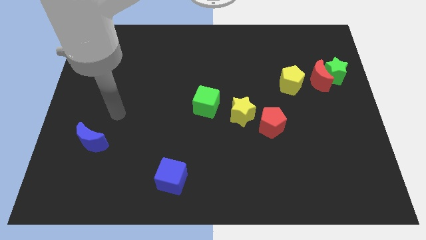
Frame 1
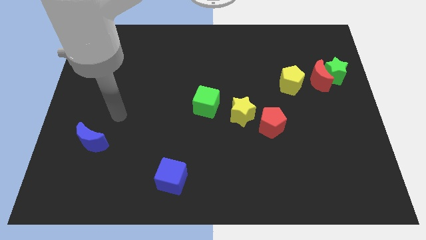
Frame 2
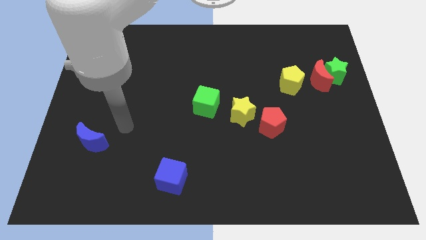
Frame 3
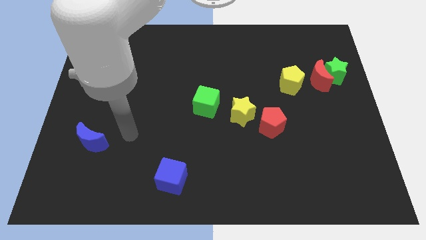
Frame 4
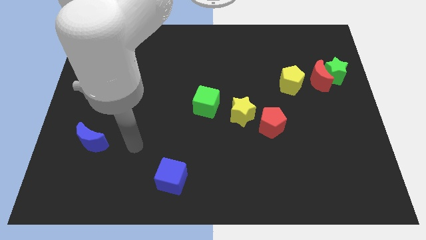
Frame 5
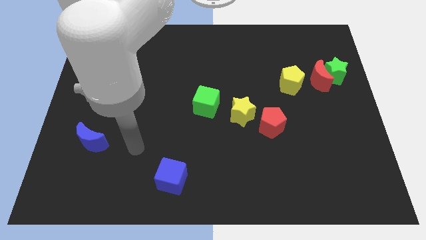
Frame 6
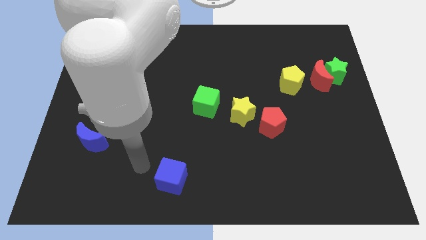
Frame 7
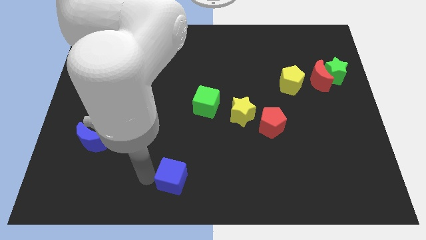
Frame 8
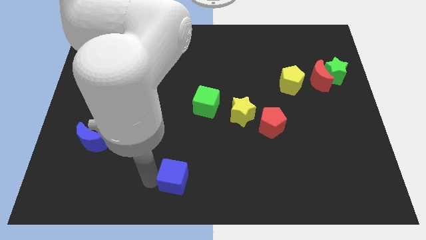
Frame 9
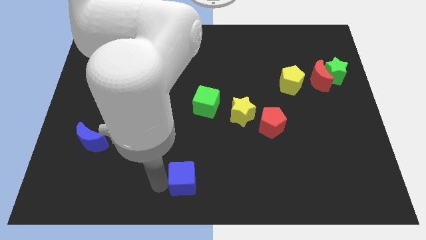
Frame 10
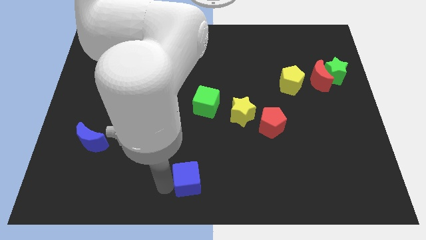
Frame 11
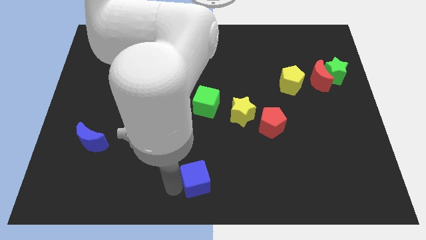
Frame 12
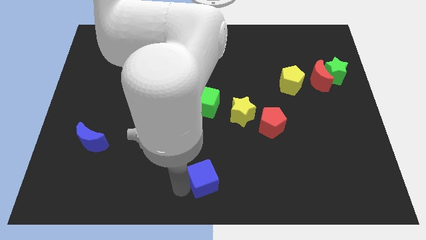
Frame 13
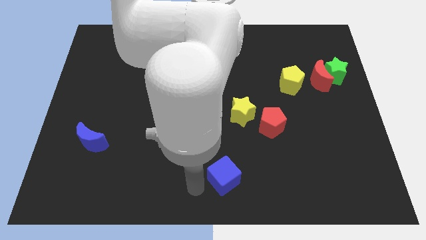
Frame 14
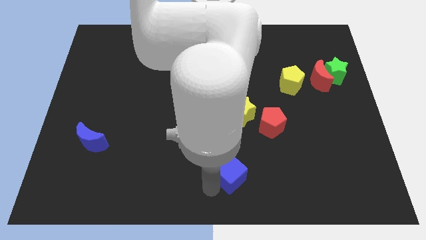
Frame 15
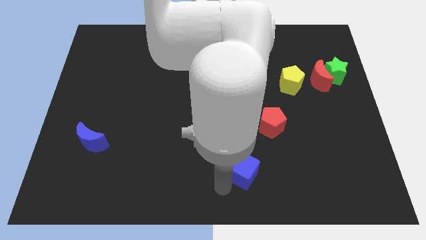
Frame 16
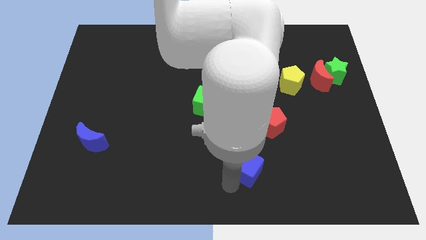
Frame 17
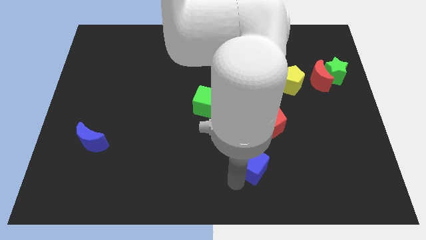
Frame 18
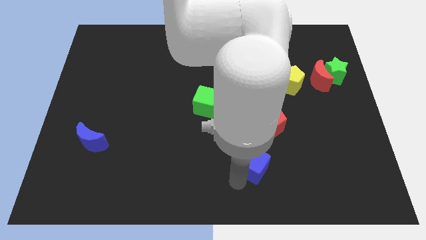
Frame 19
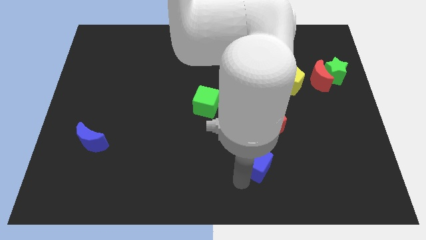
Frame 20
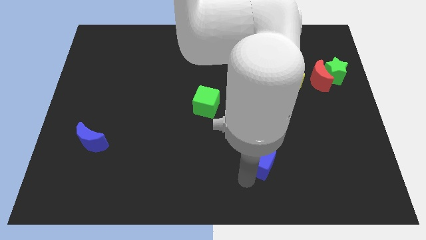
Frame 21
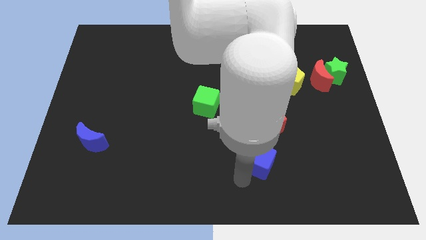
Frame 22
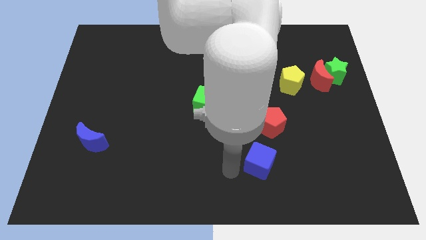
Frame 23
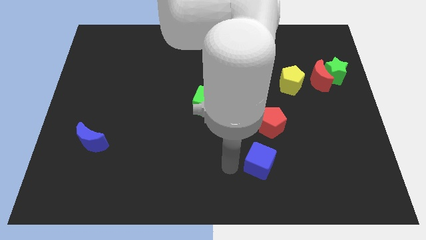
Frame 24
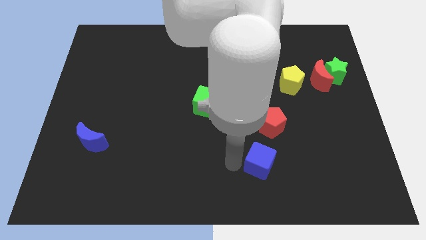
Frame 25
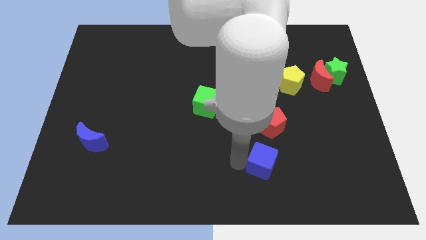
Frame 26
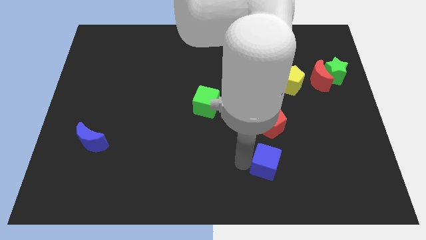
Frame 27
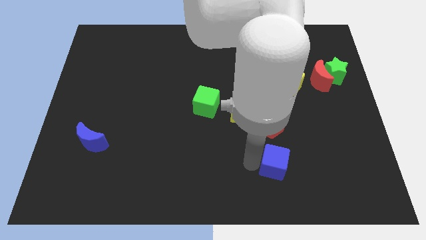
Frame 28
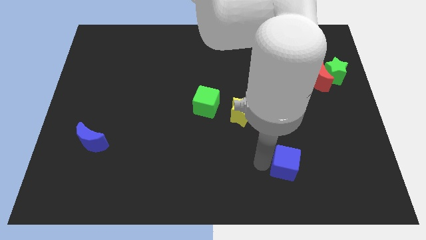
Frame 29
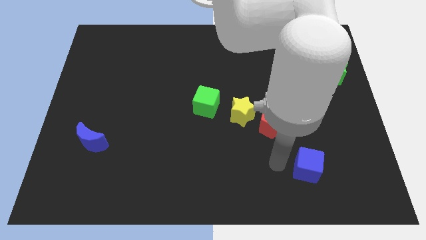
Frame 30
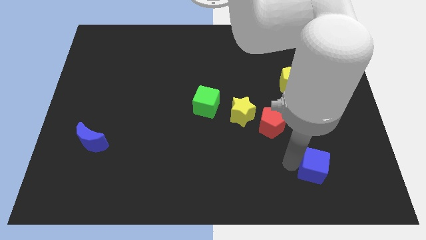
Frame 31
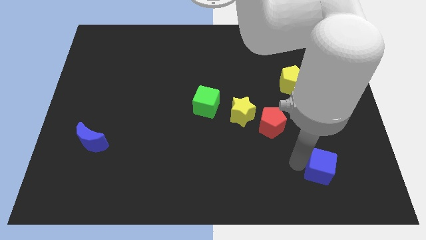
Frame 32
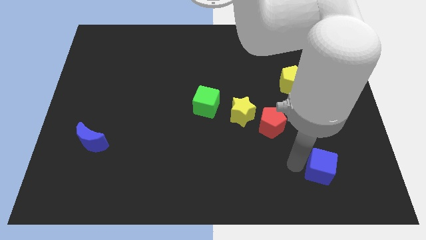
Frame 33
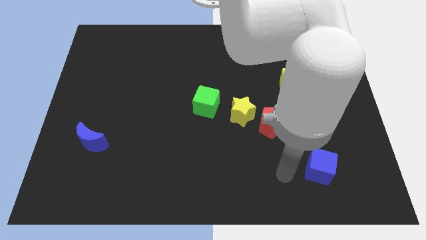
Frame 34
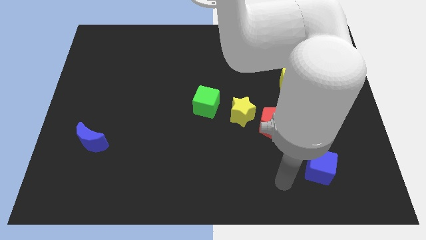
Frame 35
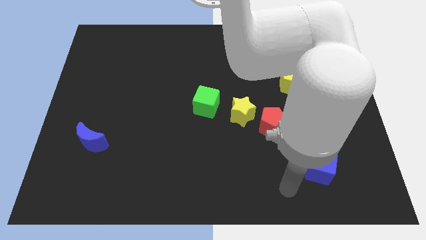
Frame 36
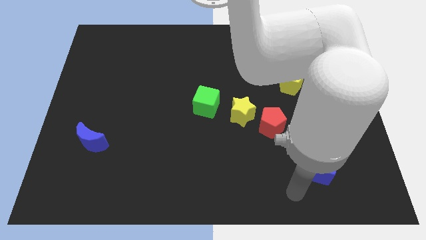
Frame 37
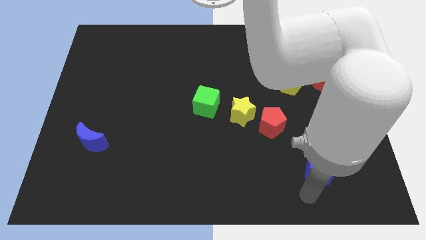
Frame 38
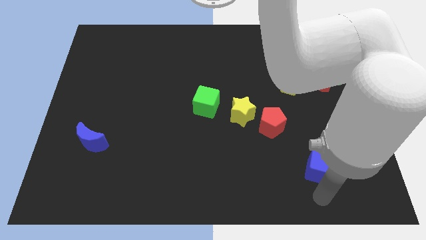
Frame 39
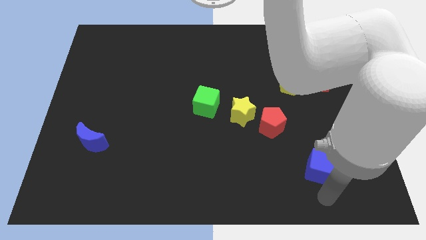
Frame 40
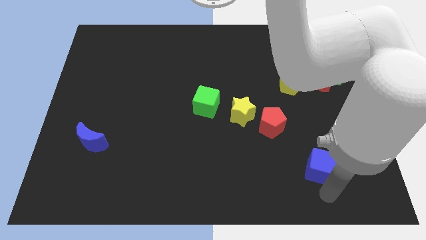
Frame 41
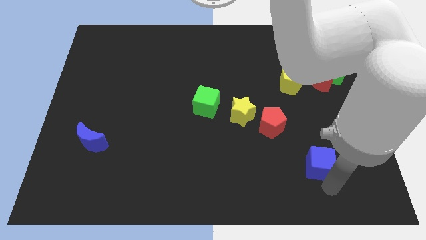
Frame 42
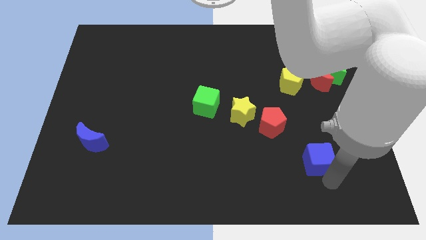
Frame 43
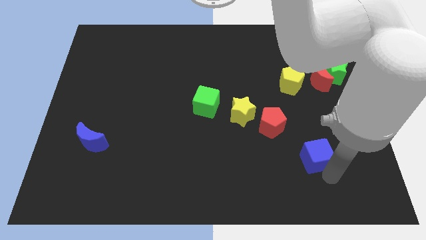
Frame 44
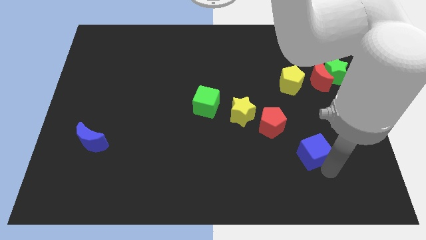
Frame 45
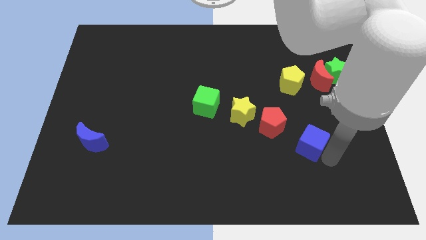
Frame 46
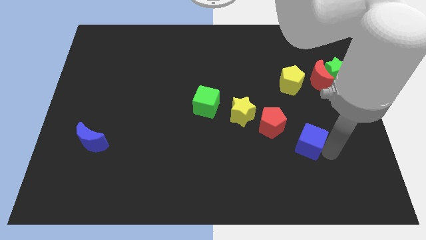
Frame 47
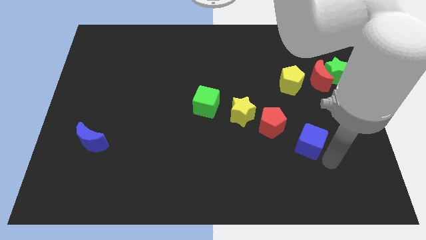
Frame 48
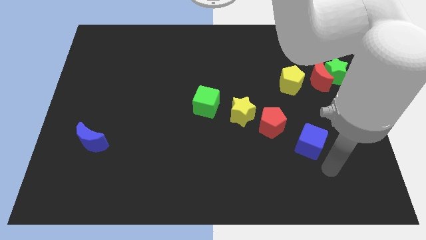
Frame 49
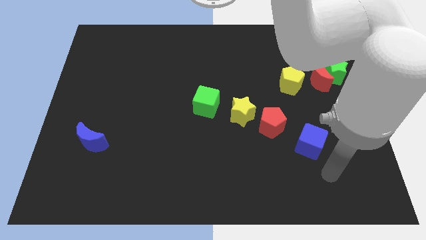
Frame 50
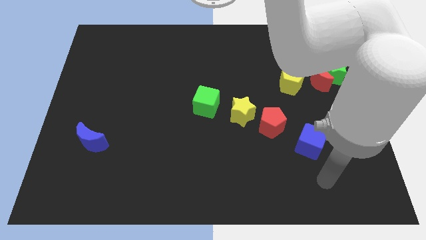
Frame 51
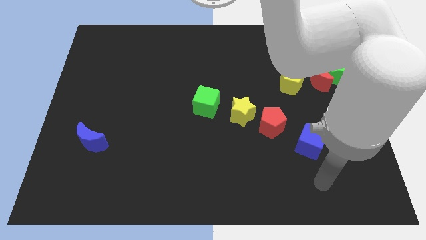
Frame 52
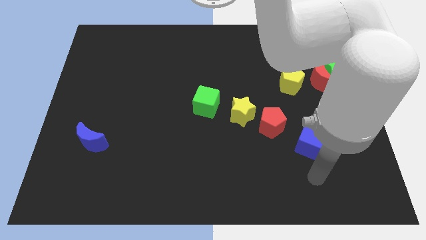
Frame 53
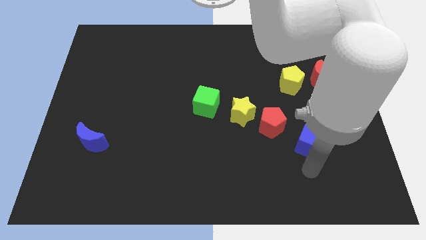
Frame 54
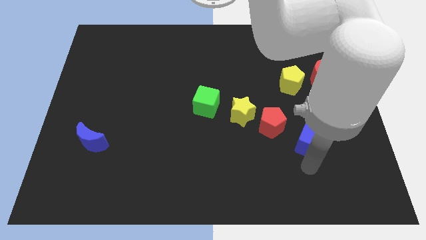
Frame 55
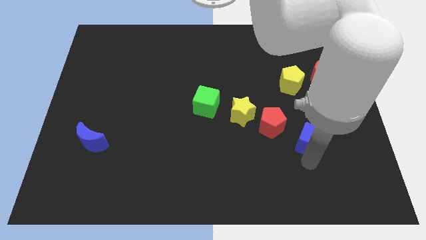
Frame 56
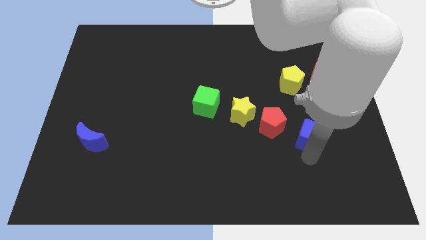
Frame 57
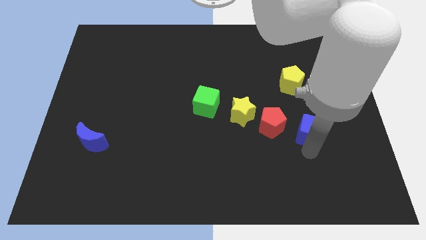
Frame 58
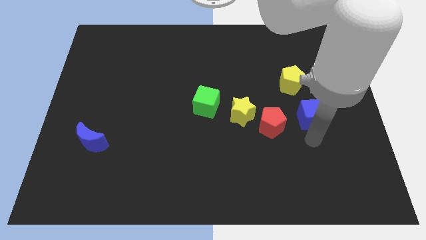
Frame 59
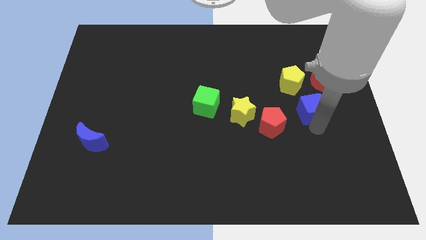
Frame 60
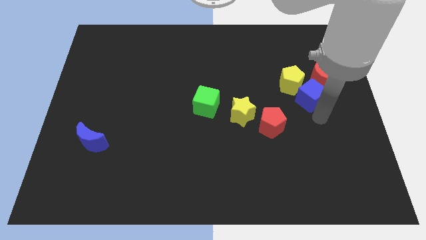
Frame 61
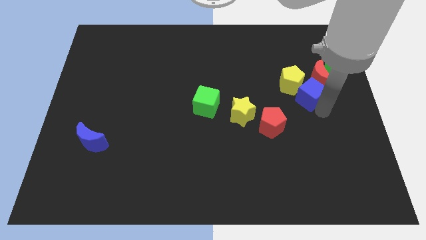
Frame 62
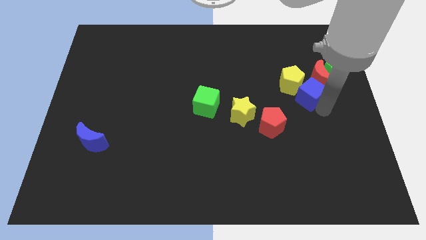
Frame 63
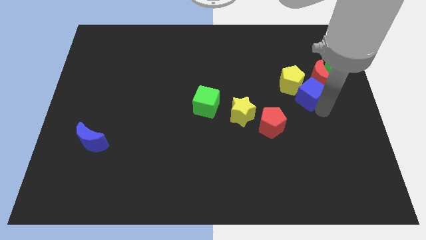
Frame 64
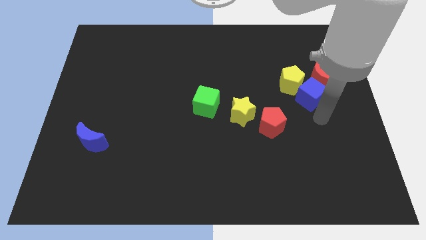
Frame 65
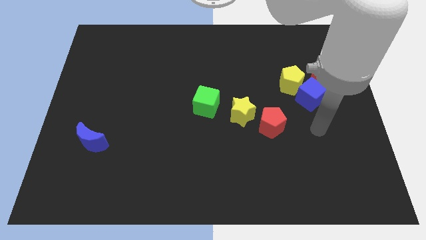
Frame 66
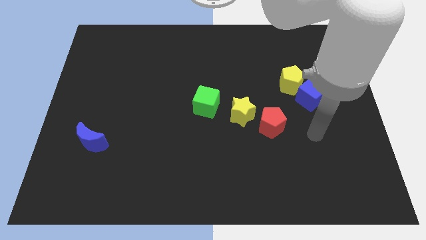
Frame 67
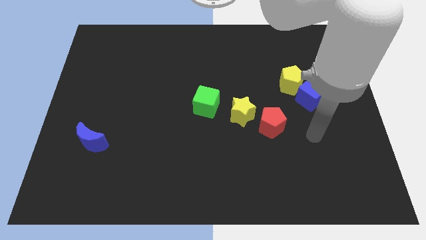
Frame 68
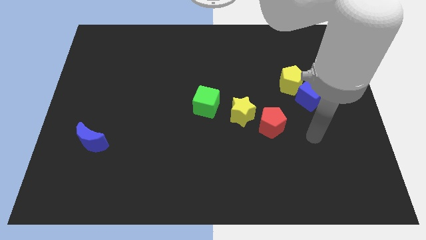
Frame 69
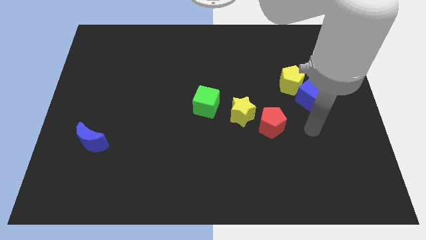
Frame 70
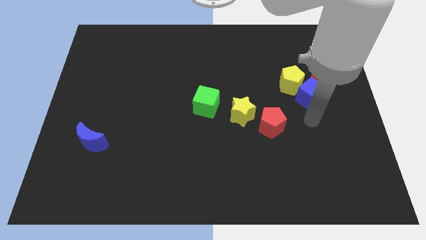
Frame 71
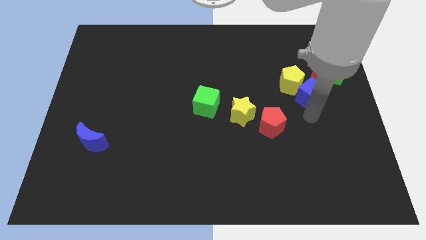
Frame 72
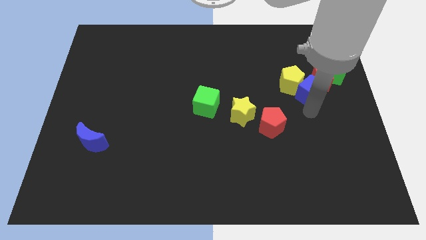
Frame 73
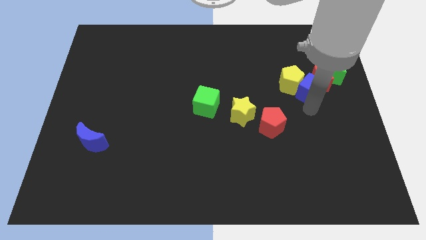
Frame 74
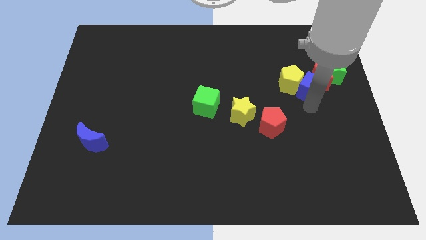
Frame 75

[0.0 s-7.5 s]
move the blue cube to the red moon
